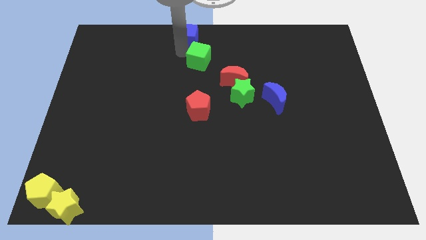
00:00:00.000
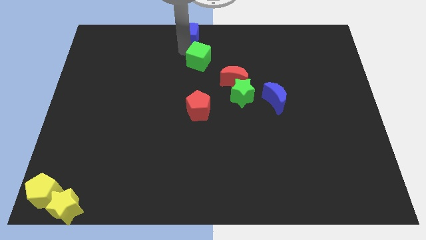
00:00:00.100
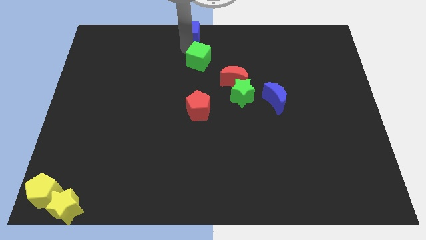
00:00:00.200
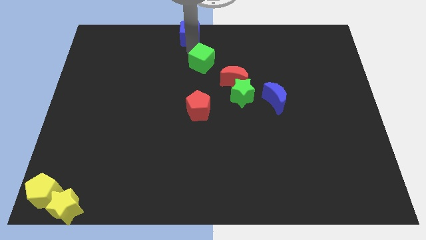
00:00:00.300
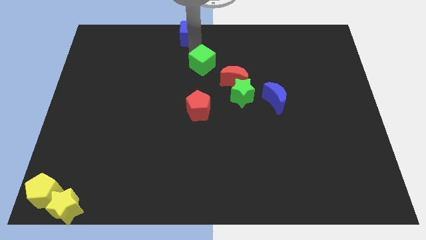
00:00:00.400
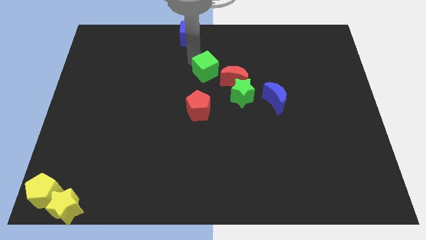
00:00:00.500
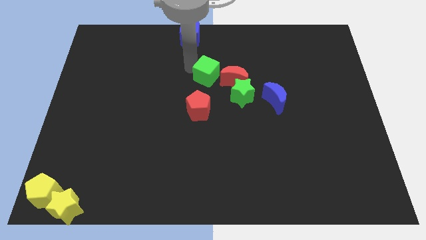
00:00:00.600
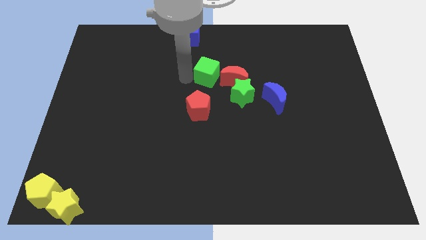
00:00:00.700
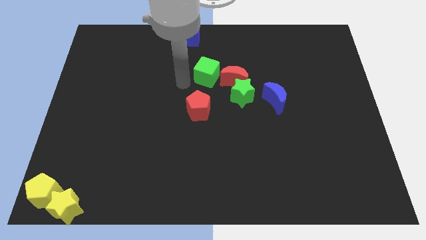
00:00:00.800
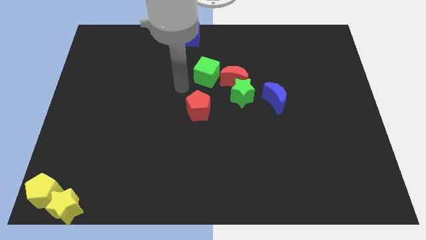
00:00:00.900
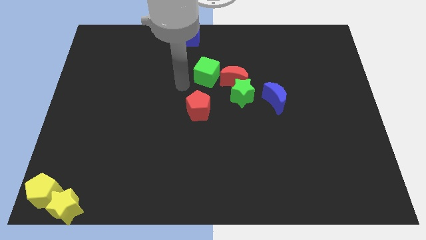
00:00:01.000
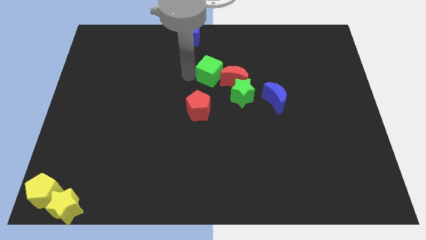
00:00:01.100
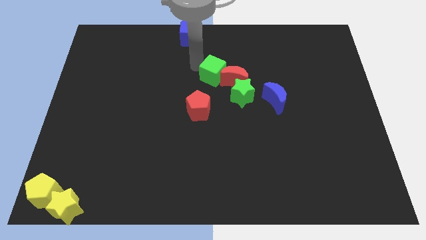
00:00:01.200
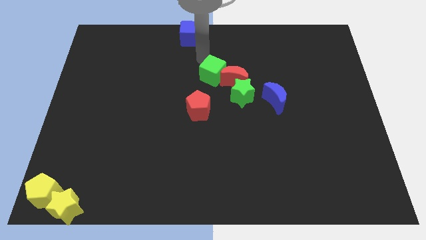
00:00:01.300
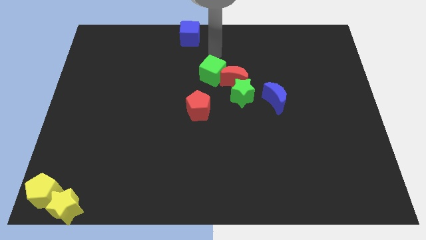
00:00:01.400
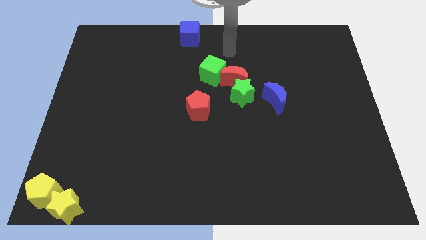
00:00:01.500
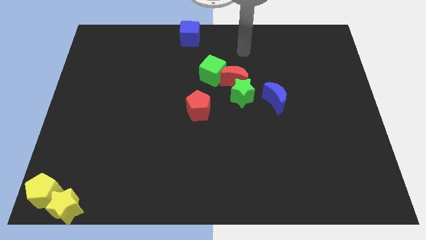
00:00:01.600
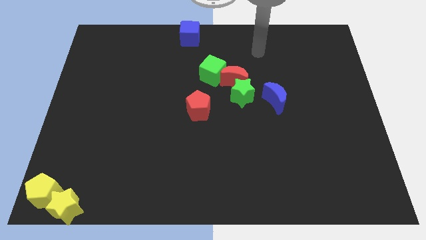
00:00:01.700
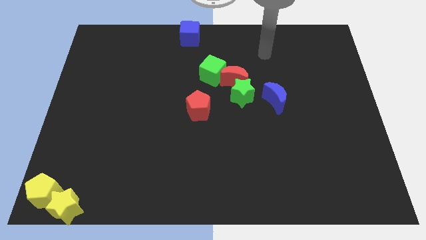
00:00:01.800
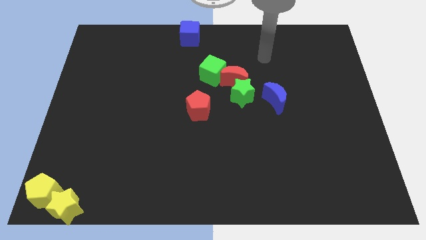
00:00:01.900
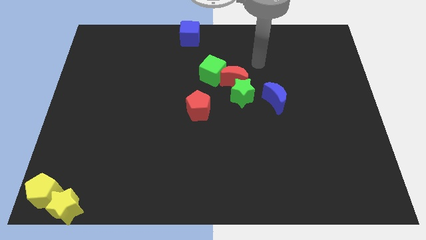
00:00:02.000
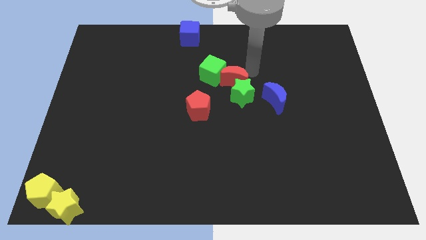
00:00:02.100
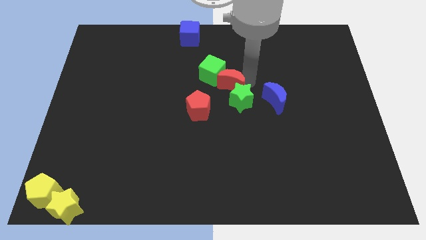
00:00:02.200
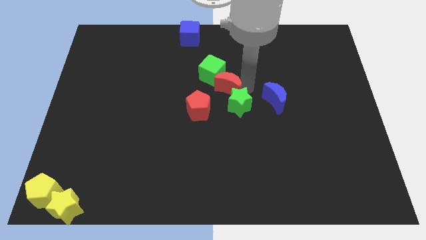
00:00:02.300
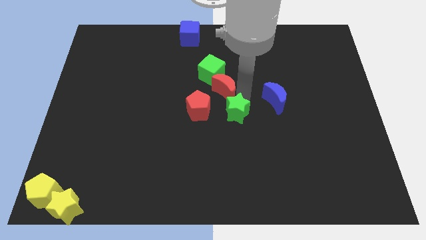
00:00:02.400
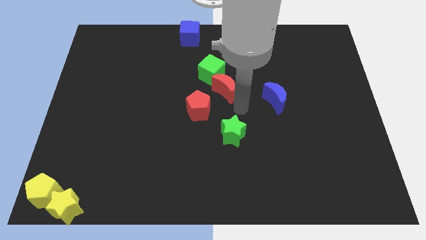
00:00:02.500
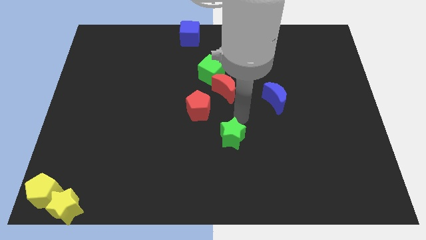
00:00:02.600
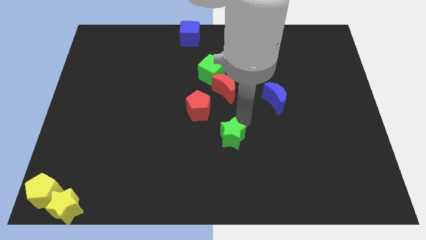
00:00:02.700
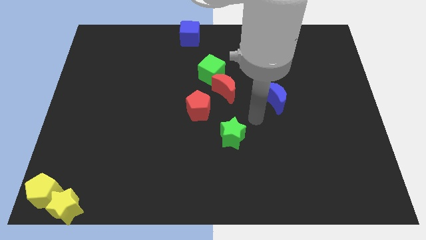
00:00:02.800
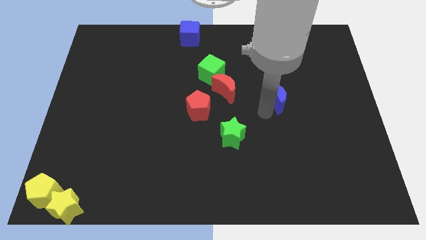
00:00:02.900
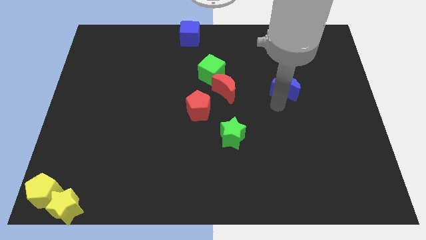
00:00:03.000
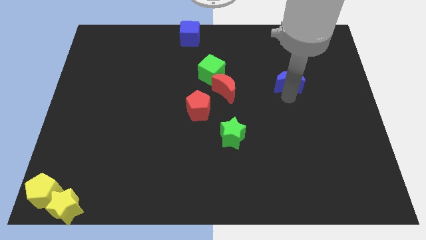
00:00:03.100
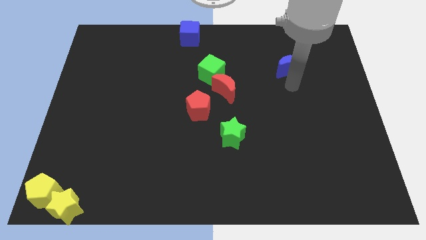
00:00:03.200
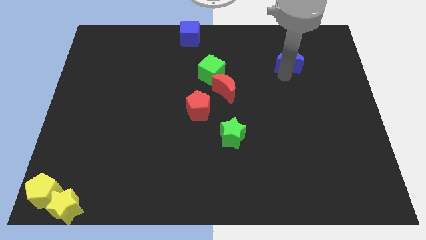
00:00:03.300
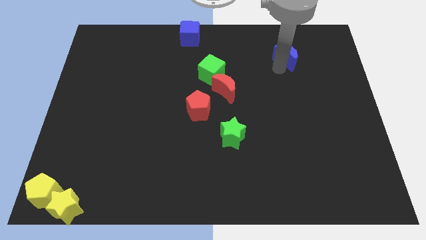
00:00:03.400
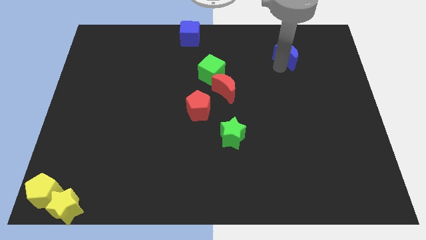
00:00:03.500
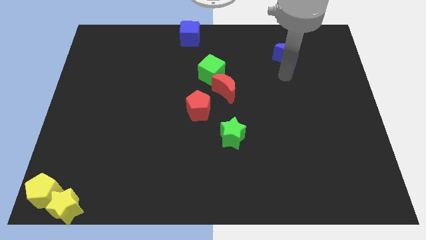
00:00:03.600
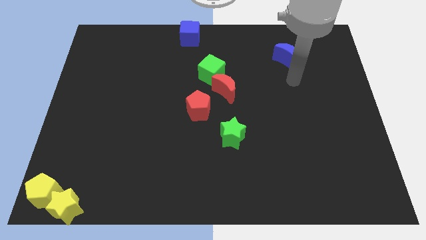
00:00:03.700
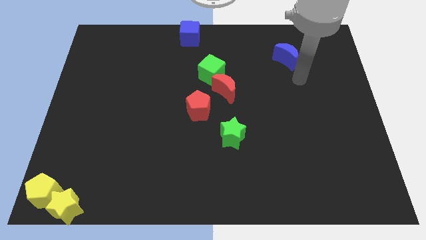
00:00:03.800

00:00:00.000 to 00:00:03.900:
separate green star from the red crescent

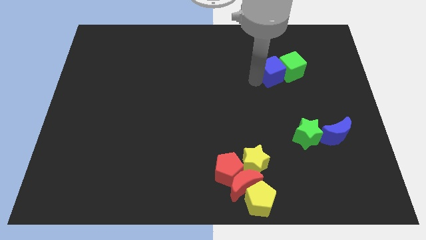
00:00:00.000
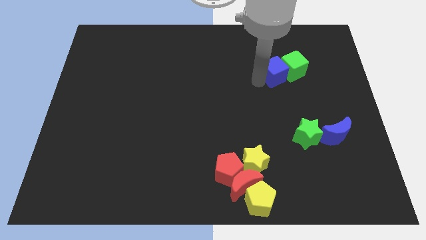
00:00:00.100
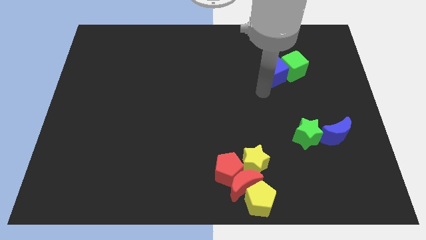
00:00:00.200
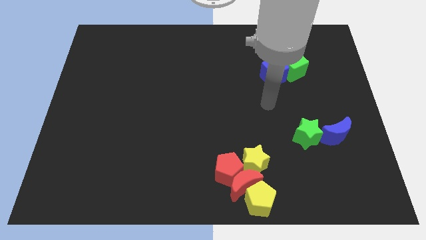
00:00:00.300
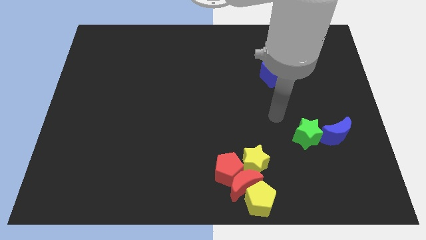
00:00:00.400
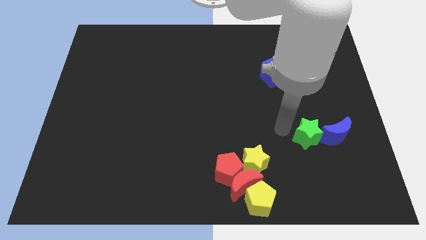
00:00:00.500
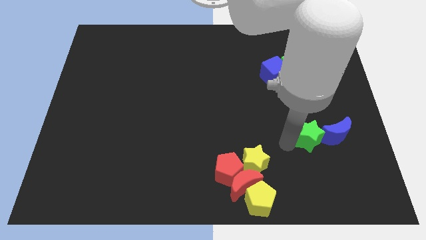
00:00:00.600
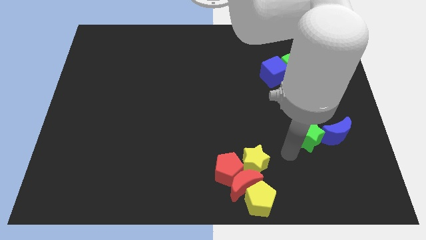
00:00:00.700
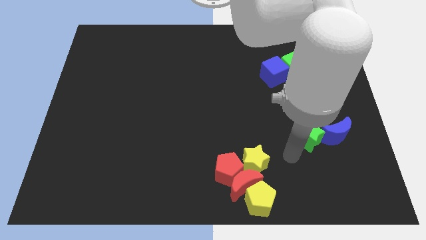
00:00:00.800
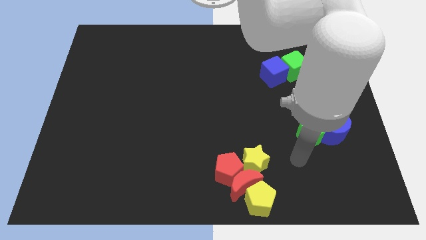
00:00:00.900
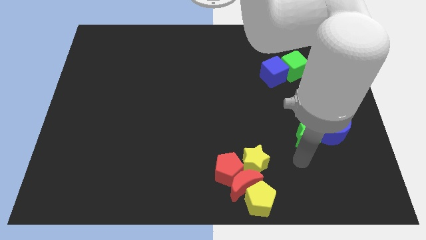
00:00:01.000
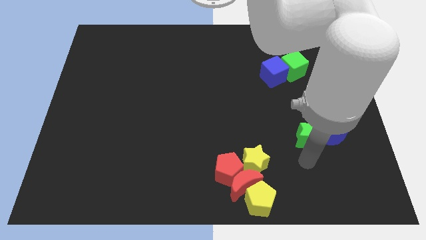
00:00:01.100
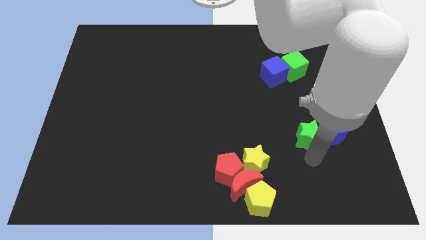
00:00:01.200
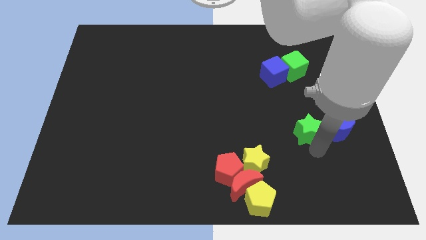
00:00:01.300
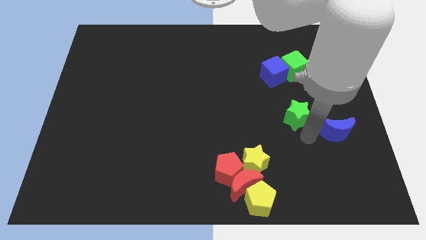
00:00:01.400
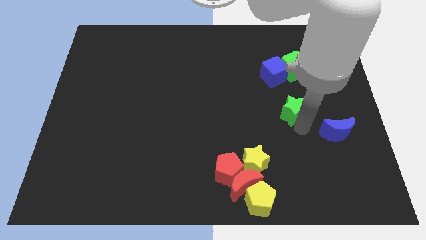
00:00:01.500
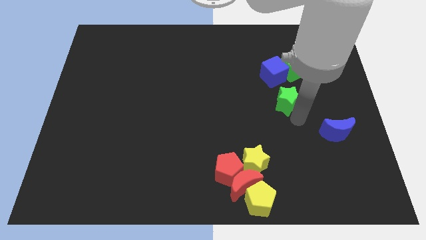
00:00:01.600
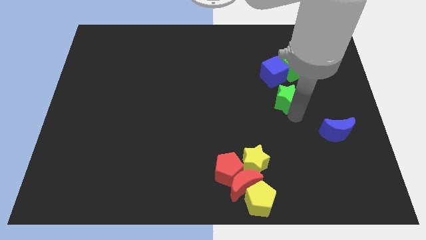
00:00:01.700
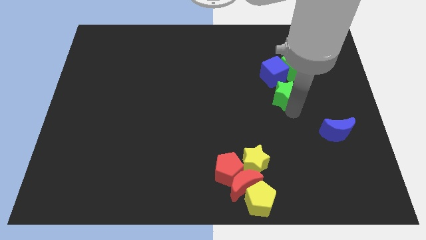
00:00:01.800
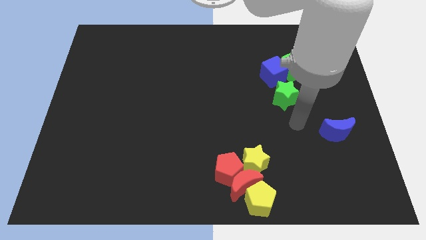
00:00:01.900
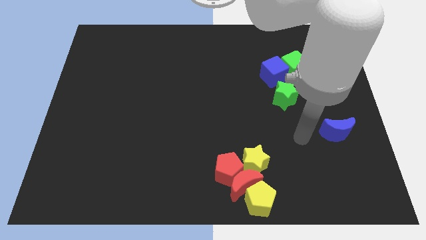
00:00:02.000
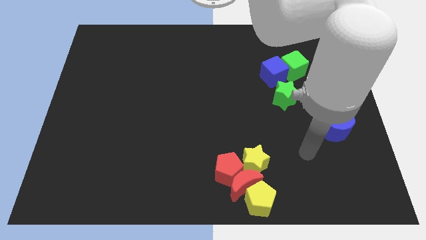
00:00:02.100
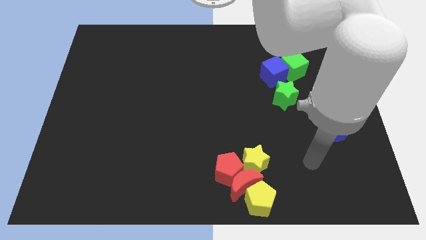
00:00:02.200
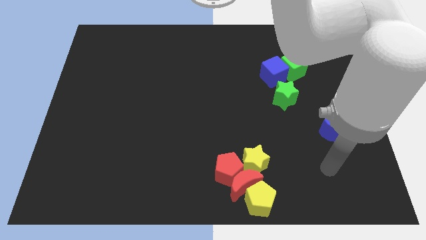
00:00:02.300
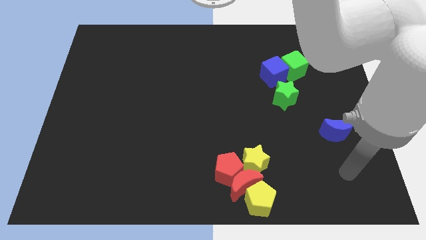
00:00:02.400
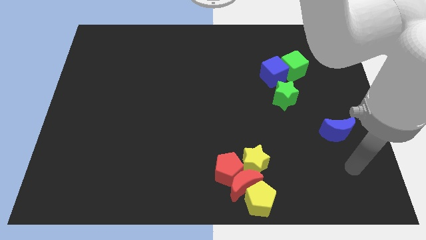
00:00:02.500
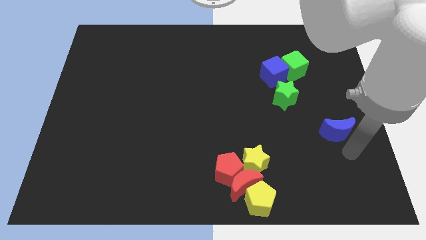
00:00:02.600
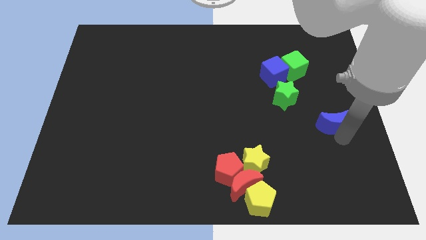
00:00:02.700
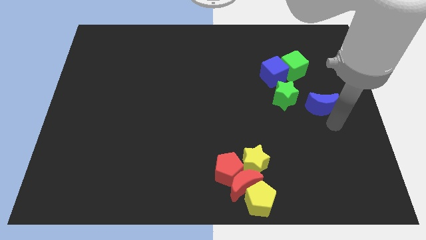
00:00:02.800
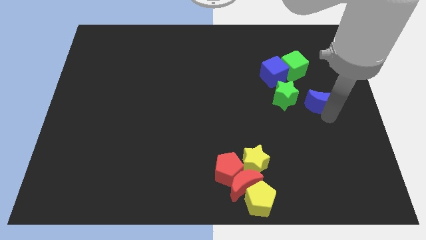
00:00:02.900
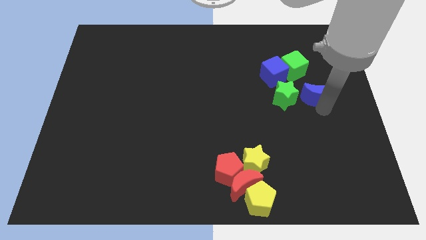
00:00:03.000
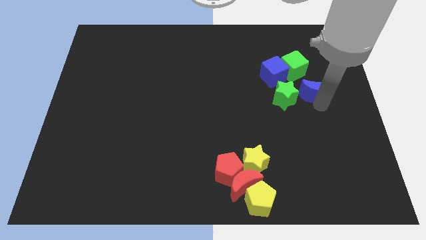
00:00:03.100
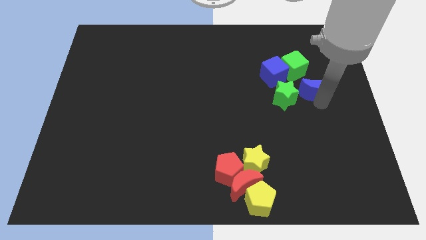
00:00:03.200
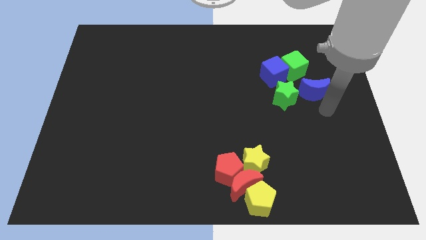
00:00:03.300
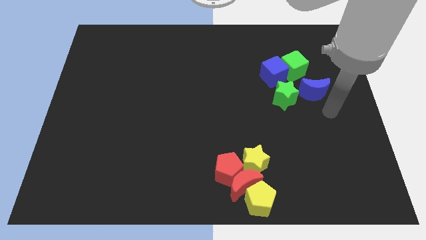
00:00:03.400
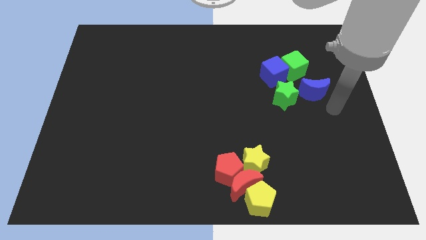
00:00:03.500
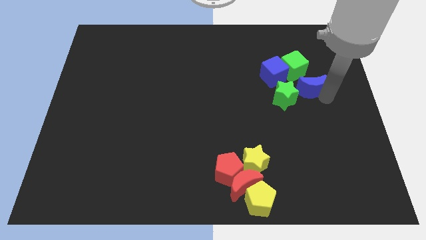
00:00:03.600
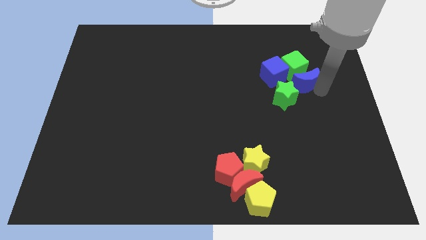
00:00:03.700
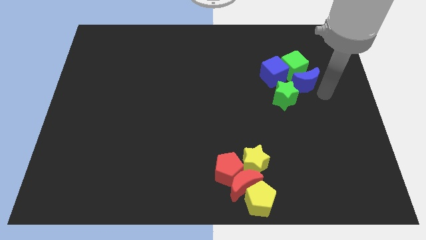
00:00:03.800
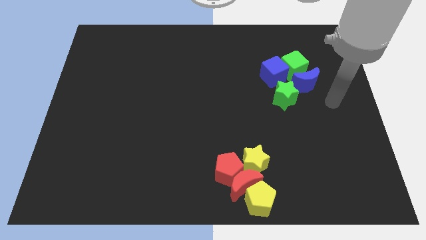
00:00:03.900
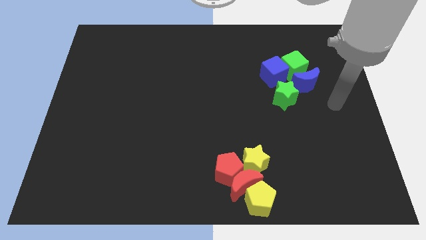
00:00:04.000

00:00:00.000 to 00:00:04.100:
move the green star and the blue crescent towards the cubes

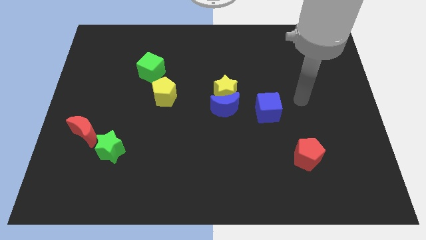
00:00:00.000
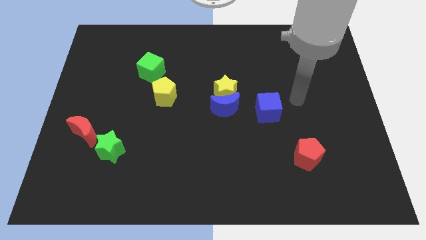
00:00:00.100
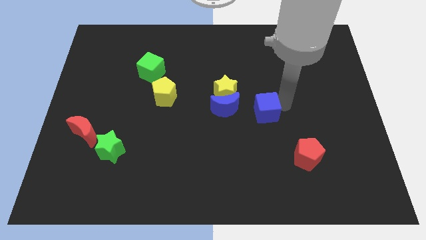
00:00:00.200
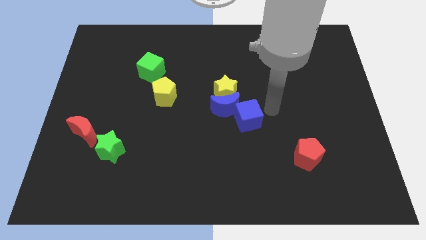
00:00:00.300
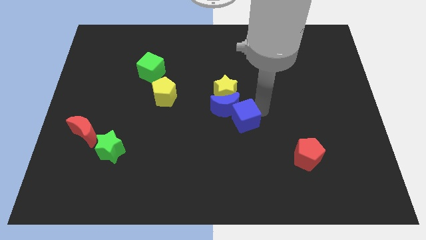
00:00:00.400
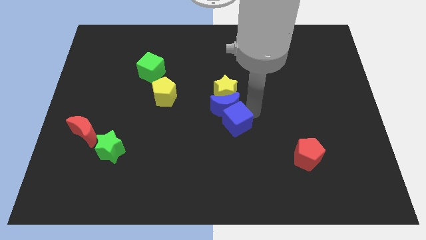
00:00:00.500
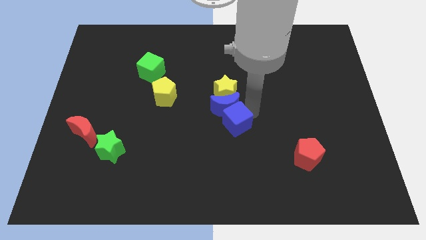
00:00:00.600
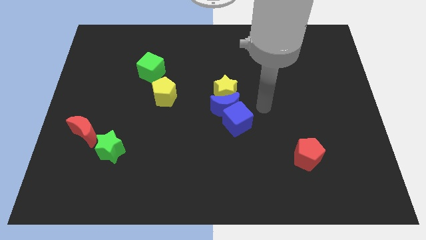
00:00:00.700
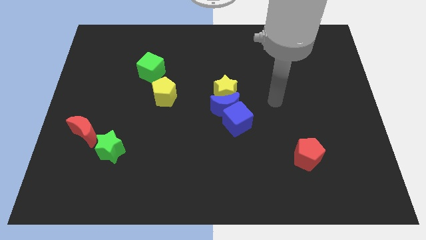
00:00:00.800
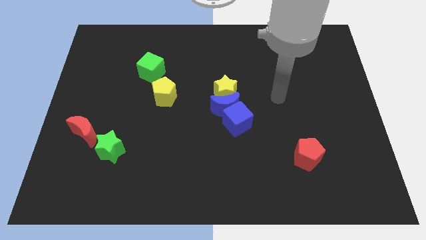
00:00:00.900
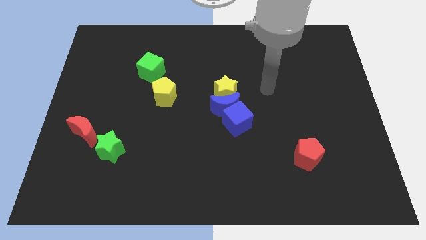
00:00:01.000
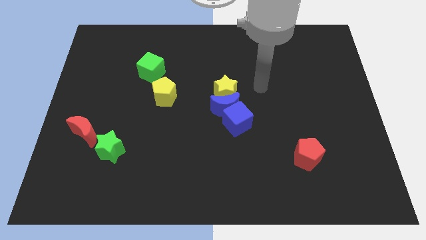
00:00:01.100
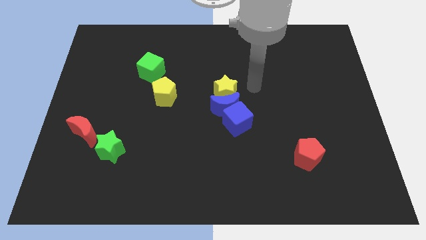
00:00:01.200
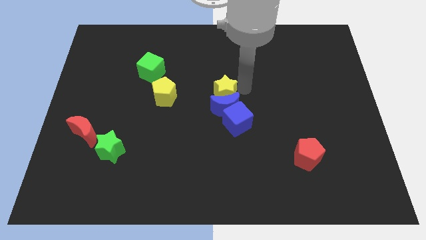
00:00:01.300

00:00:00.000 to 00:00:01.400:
push the blue cube into the blue crescent
